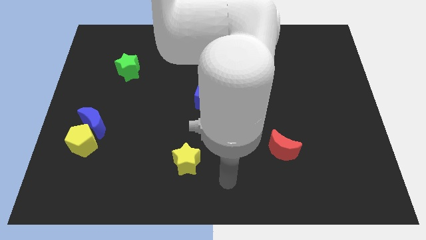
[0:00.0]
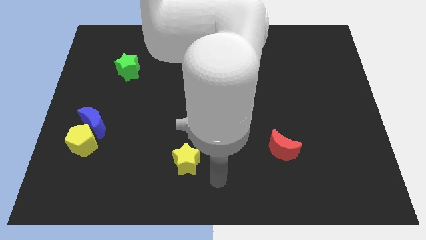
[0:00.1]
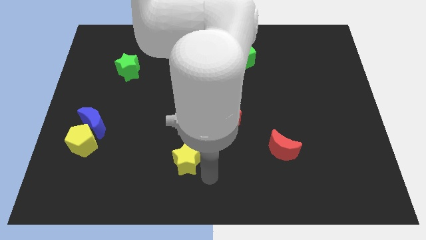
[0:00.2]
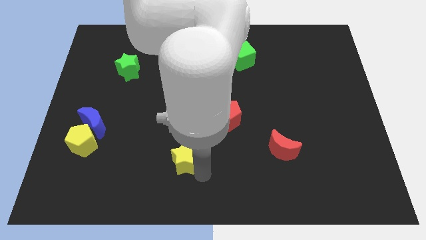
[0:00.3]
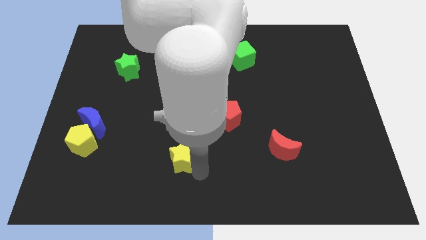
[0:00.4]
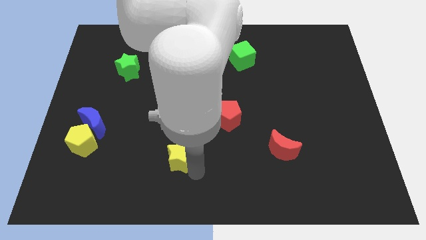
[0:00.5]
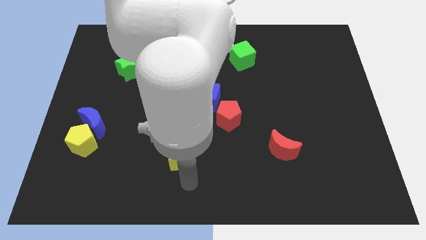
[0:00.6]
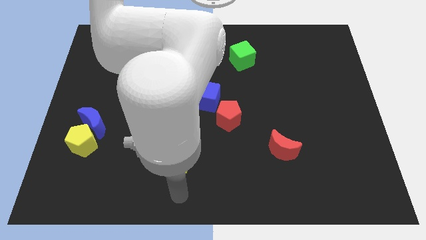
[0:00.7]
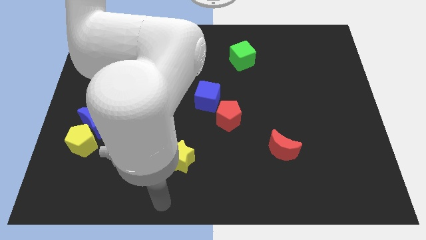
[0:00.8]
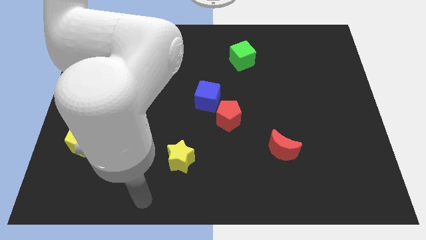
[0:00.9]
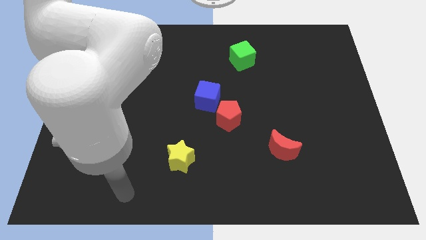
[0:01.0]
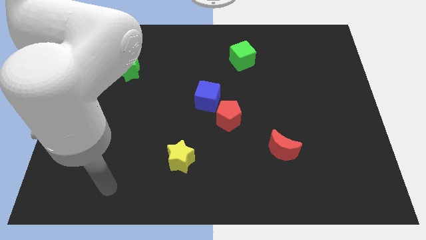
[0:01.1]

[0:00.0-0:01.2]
slightly push the yellow star to the left of the board

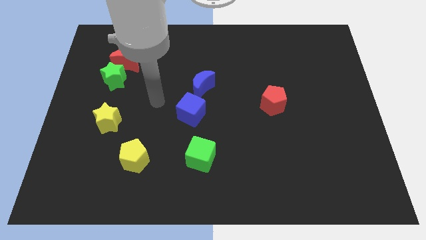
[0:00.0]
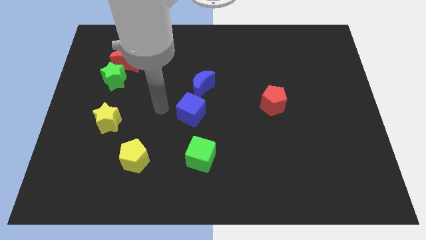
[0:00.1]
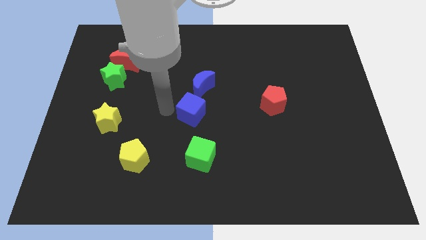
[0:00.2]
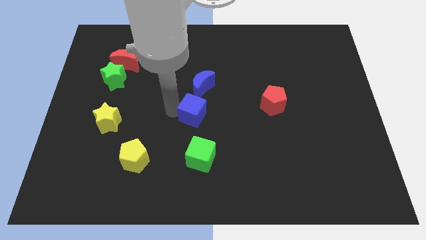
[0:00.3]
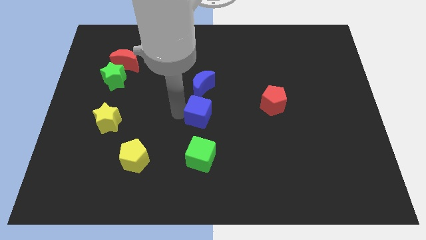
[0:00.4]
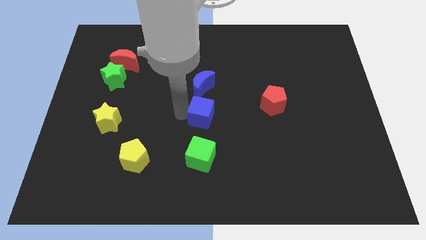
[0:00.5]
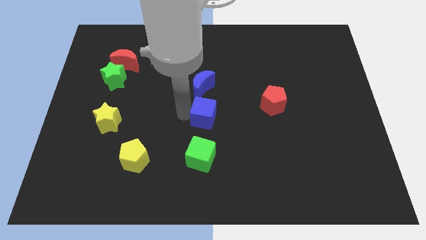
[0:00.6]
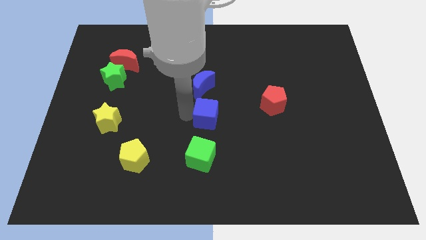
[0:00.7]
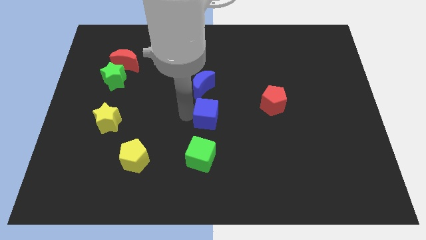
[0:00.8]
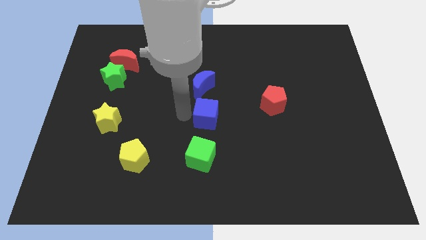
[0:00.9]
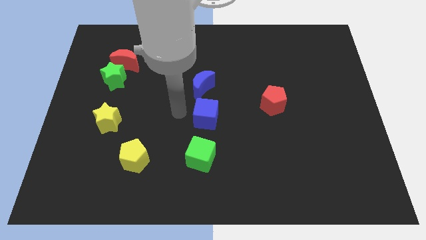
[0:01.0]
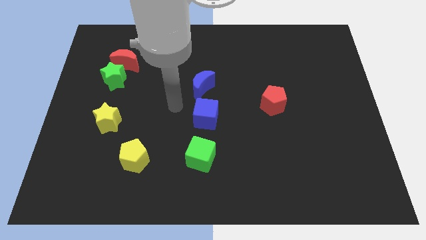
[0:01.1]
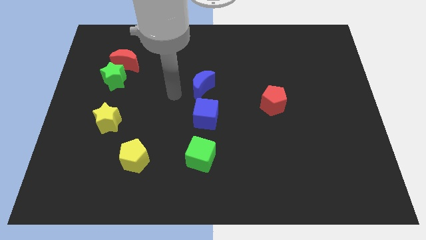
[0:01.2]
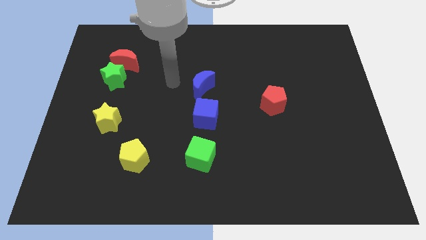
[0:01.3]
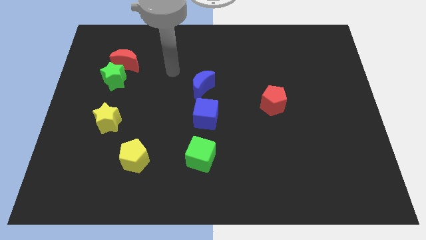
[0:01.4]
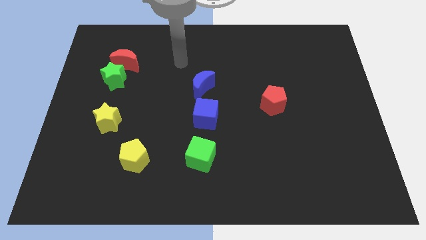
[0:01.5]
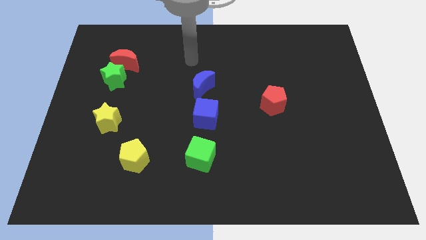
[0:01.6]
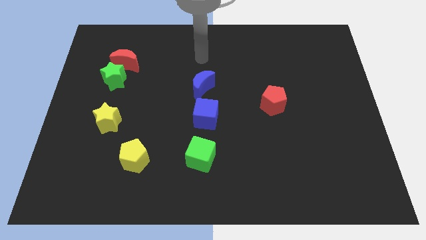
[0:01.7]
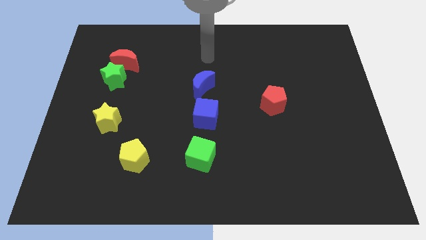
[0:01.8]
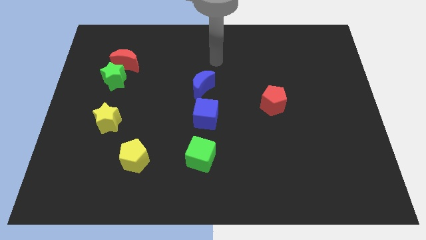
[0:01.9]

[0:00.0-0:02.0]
arrange the blue cube in between the blue moon and green cube

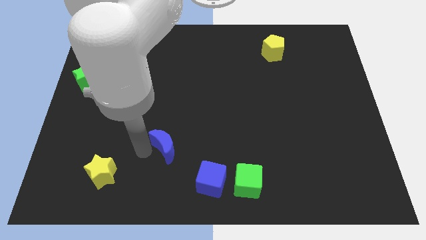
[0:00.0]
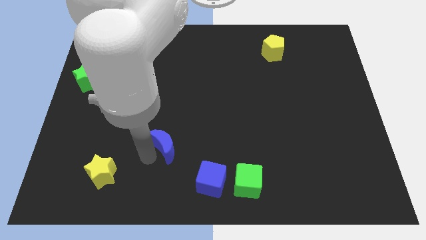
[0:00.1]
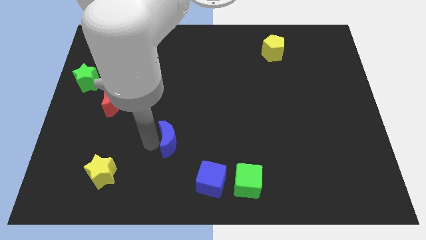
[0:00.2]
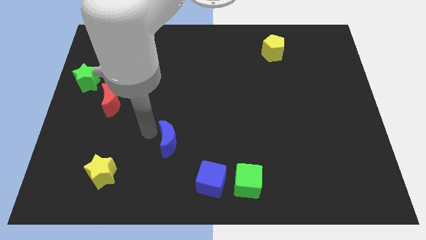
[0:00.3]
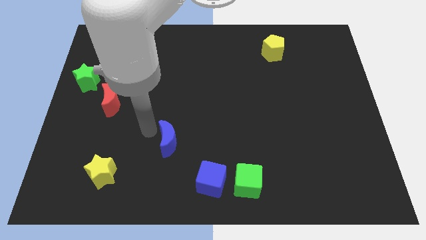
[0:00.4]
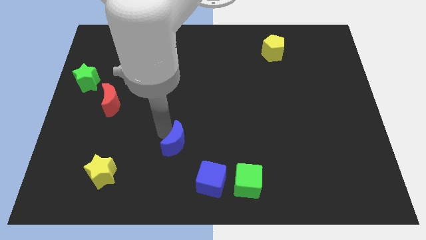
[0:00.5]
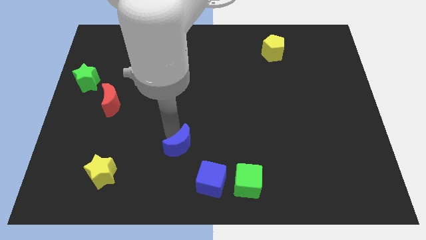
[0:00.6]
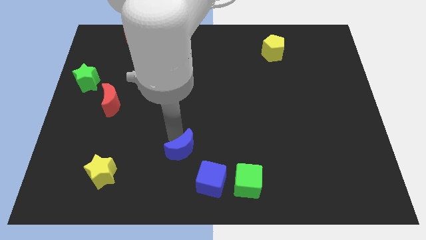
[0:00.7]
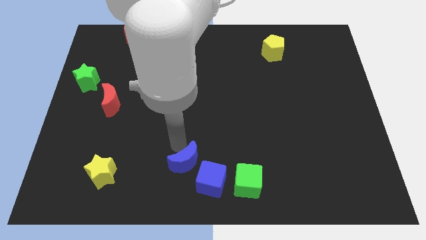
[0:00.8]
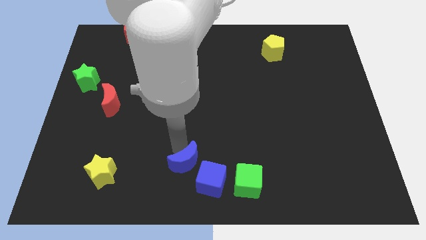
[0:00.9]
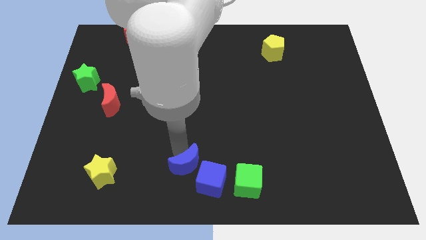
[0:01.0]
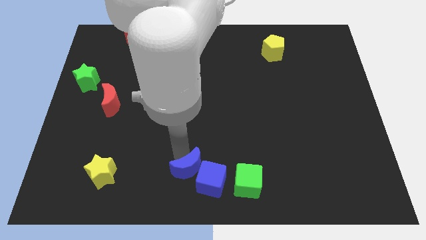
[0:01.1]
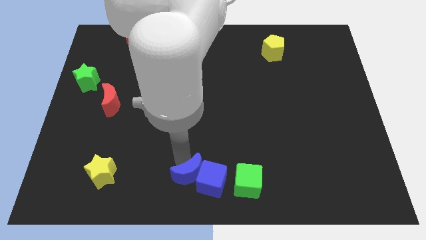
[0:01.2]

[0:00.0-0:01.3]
put the blue moon into the blue cube

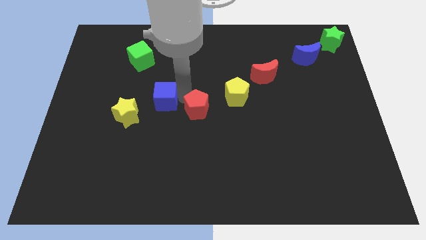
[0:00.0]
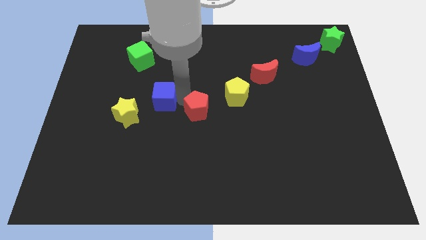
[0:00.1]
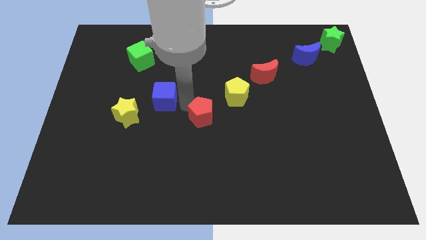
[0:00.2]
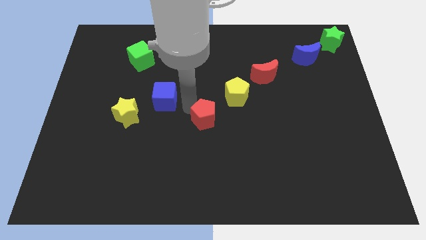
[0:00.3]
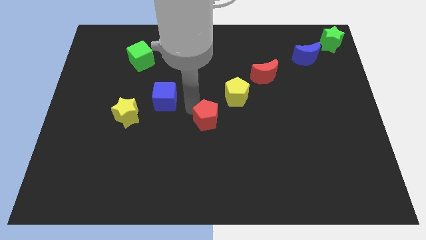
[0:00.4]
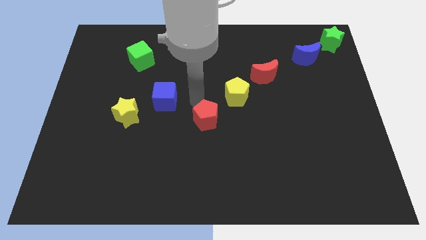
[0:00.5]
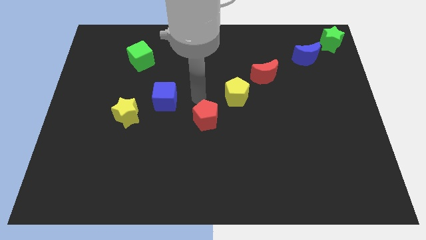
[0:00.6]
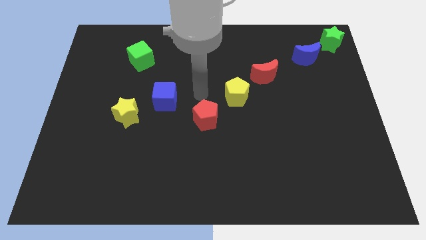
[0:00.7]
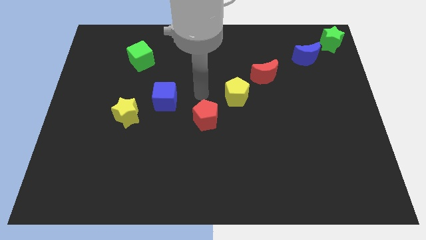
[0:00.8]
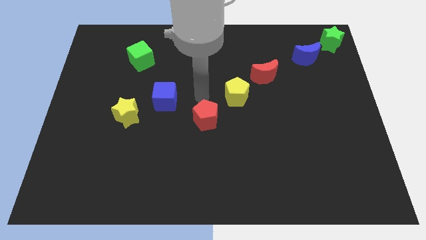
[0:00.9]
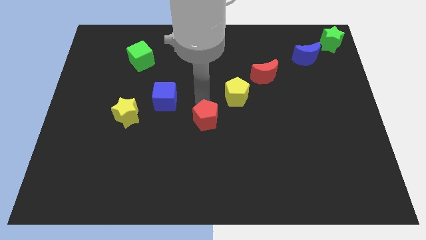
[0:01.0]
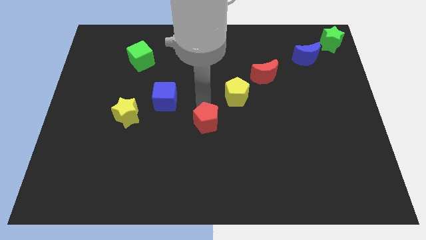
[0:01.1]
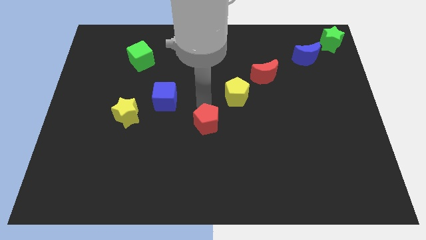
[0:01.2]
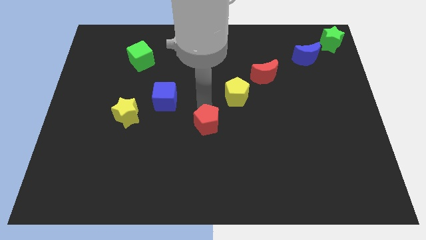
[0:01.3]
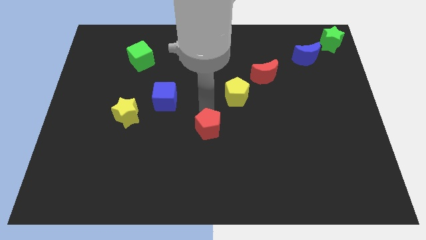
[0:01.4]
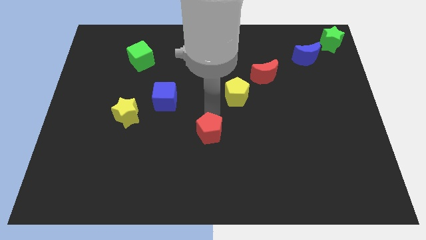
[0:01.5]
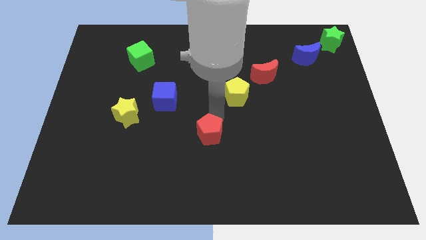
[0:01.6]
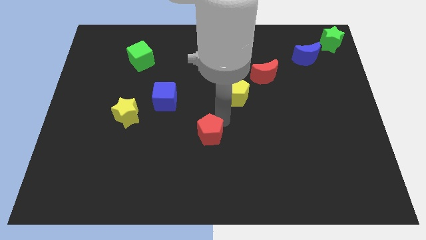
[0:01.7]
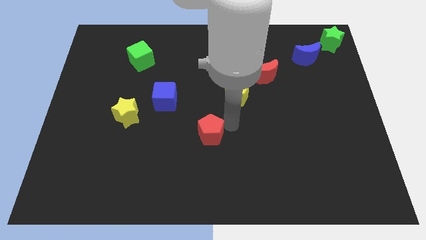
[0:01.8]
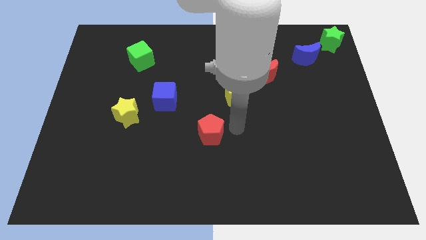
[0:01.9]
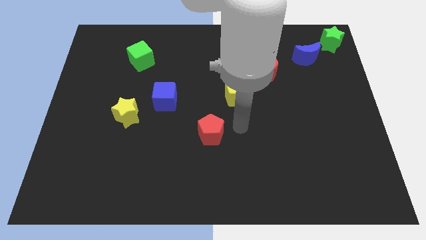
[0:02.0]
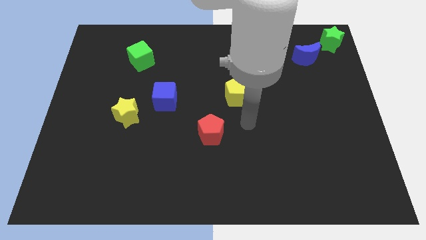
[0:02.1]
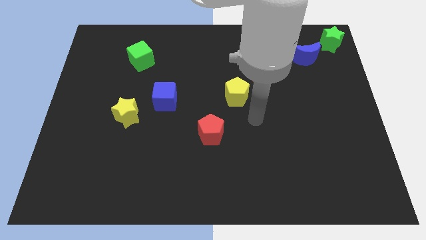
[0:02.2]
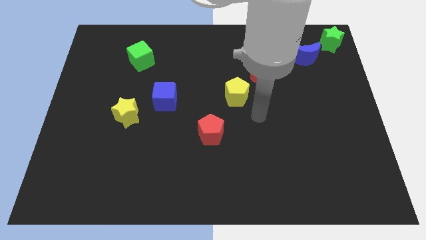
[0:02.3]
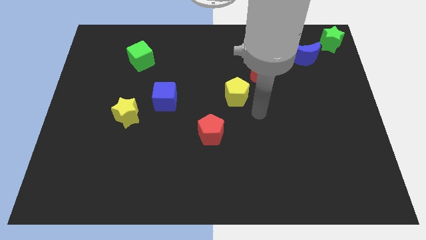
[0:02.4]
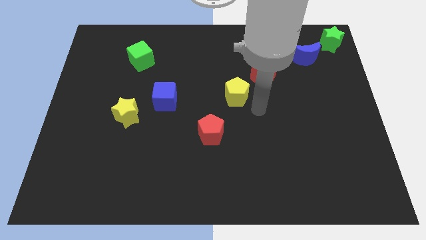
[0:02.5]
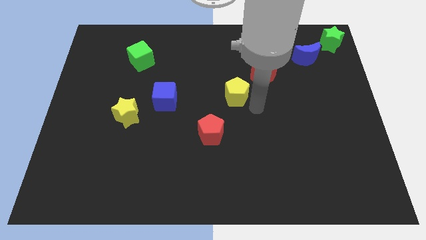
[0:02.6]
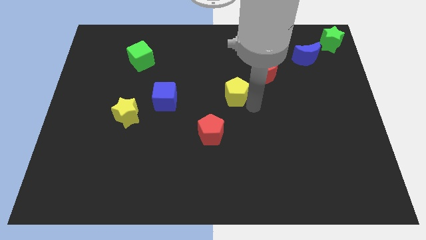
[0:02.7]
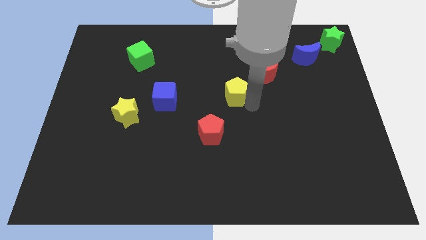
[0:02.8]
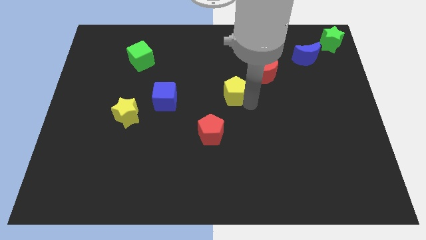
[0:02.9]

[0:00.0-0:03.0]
push the red pentagon slightly to the bottom center of the board

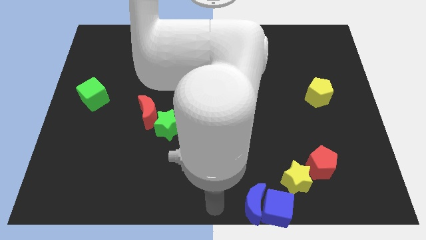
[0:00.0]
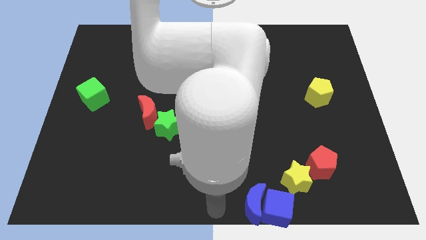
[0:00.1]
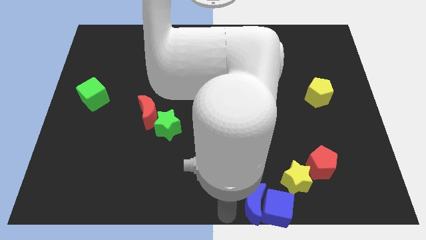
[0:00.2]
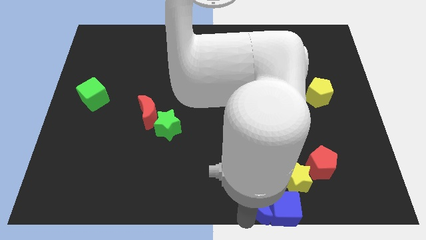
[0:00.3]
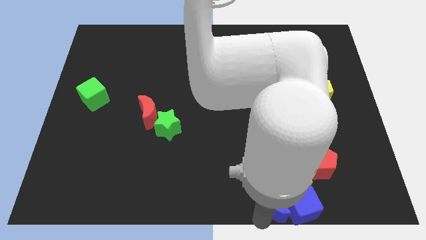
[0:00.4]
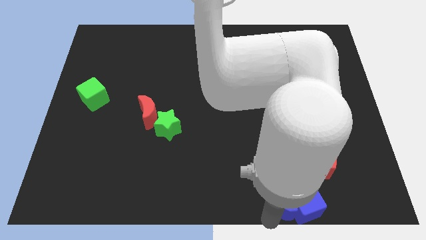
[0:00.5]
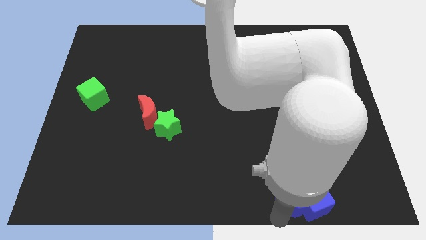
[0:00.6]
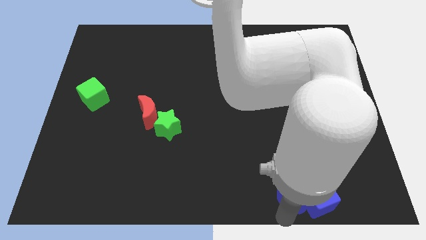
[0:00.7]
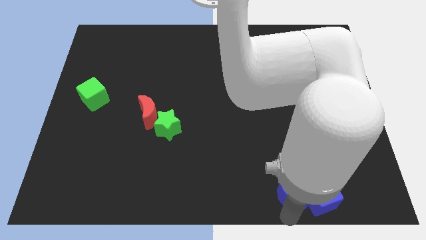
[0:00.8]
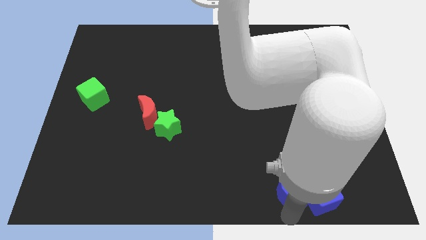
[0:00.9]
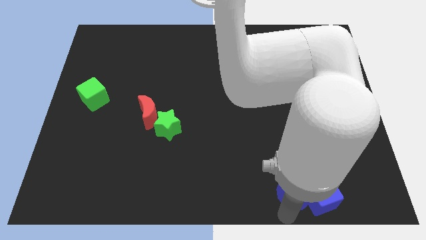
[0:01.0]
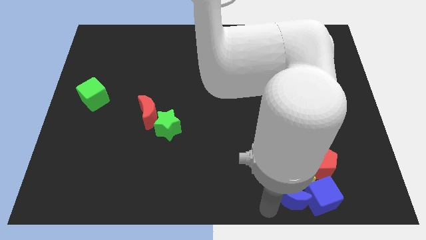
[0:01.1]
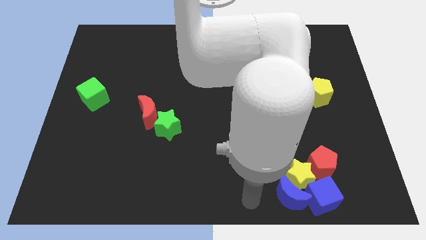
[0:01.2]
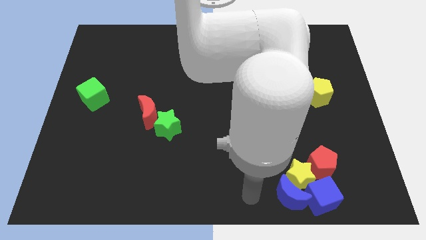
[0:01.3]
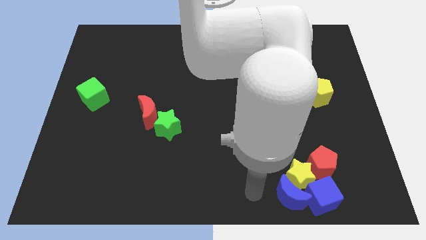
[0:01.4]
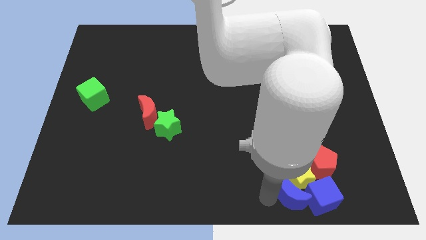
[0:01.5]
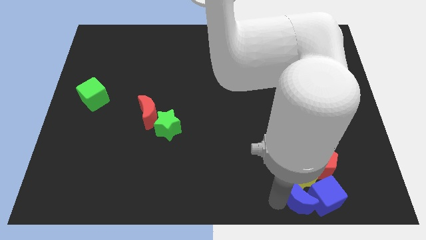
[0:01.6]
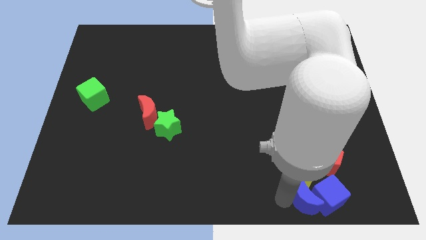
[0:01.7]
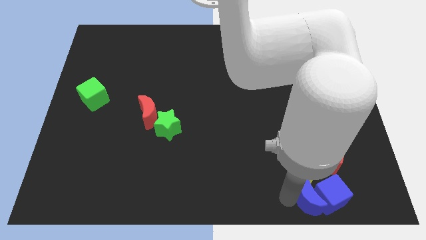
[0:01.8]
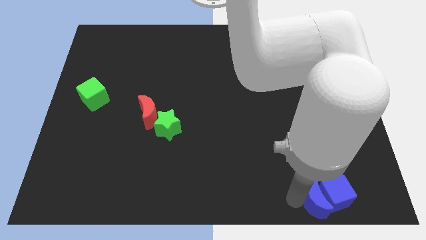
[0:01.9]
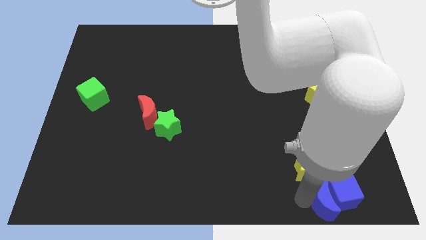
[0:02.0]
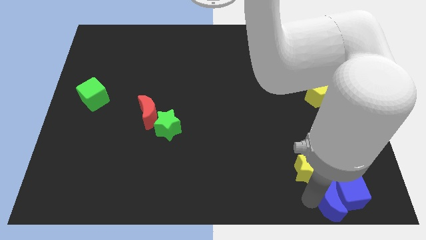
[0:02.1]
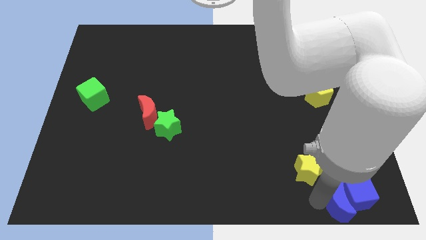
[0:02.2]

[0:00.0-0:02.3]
move the blue blocks to right bottom on board
